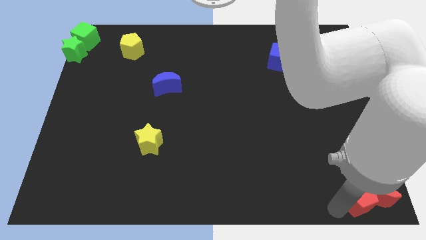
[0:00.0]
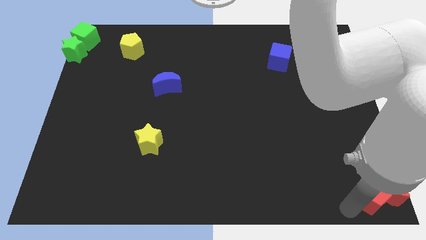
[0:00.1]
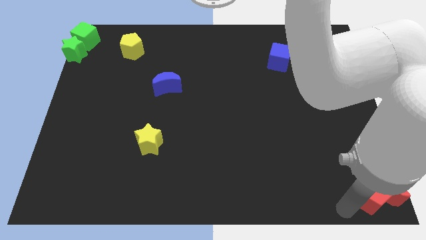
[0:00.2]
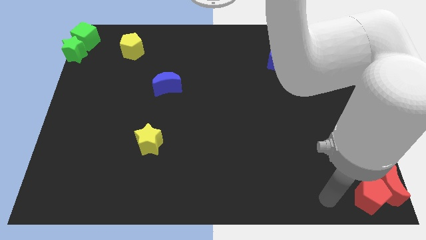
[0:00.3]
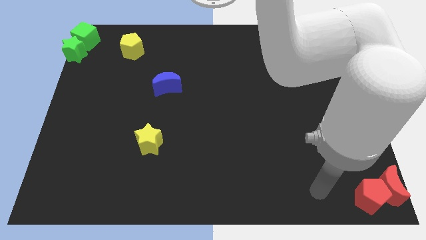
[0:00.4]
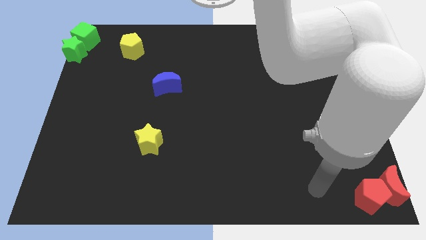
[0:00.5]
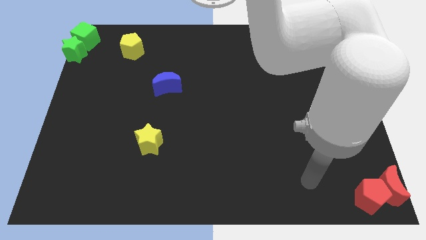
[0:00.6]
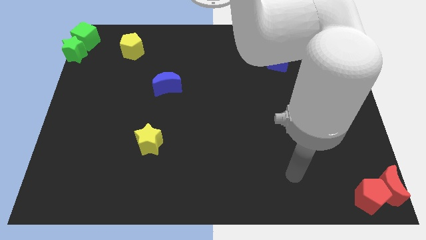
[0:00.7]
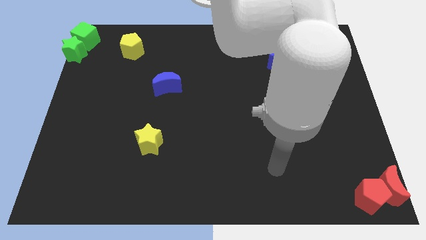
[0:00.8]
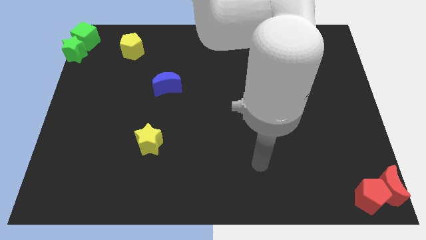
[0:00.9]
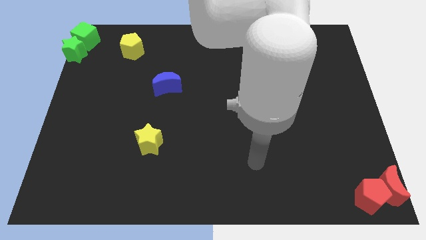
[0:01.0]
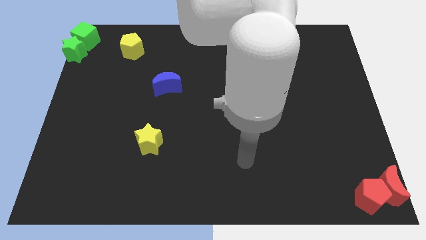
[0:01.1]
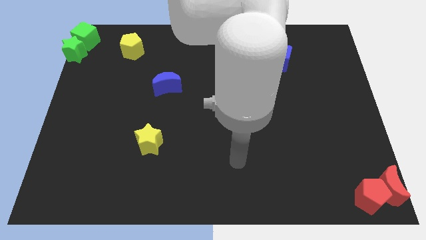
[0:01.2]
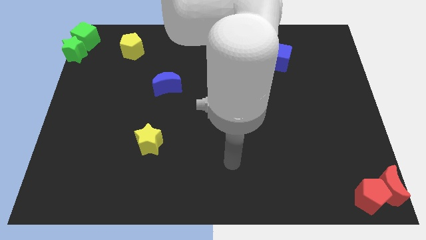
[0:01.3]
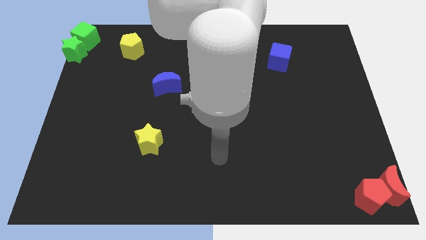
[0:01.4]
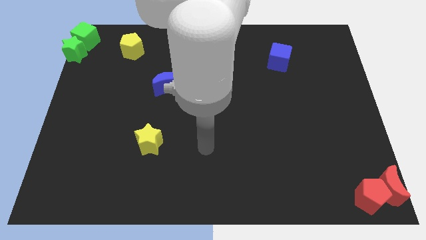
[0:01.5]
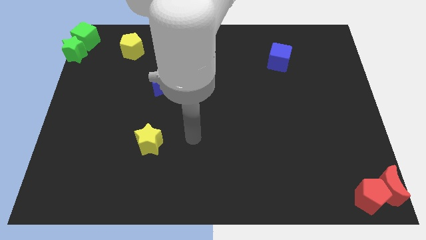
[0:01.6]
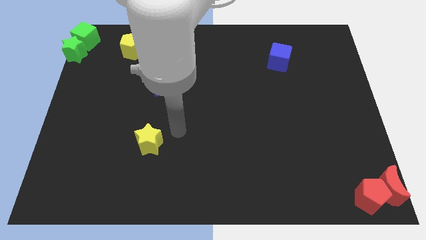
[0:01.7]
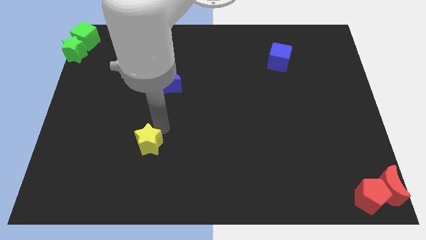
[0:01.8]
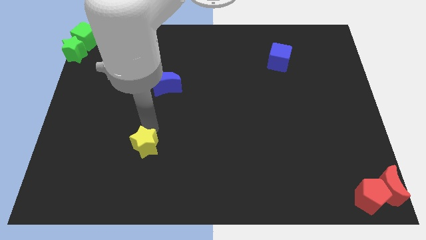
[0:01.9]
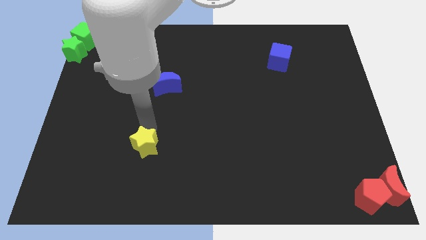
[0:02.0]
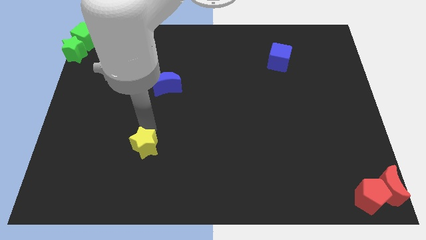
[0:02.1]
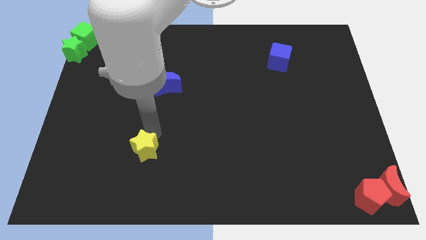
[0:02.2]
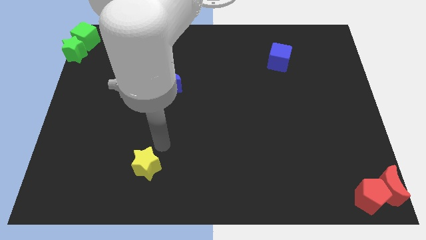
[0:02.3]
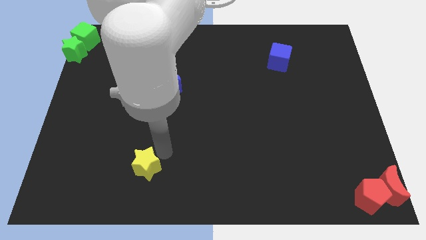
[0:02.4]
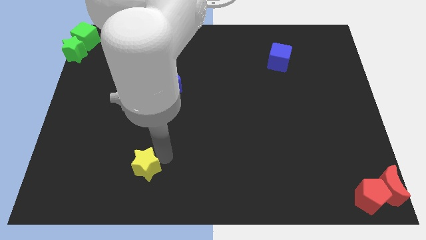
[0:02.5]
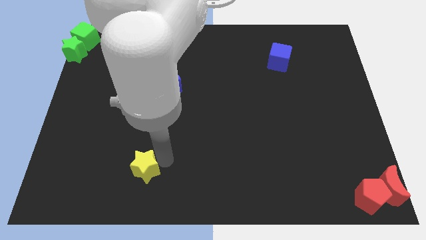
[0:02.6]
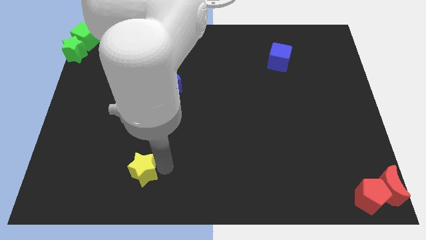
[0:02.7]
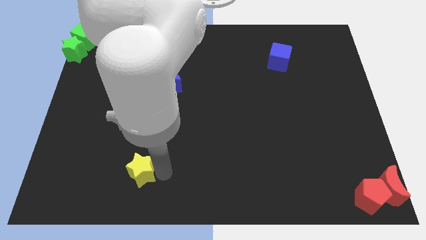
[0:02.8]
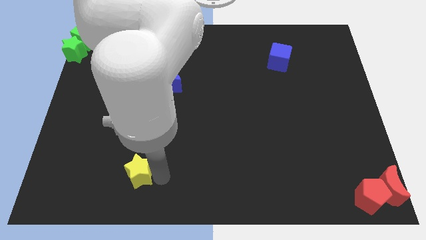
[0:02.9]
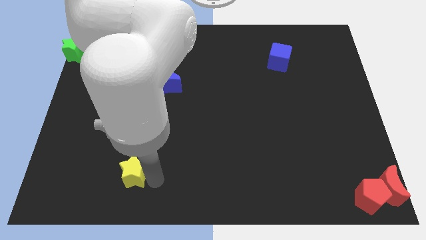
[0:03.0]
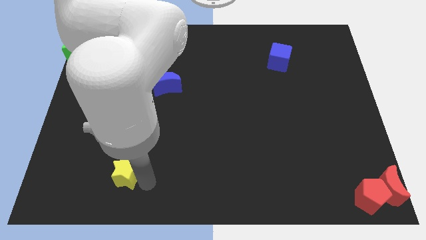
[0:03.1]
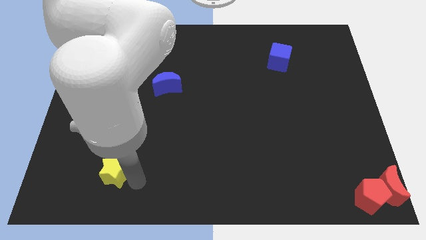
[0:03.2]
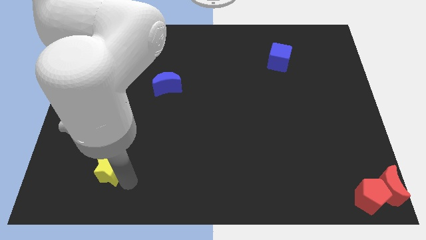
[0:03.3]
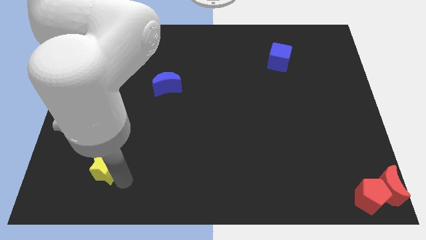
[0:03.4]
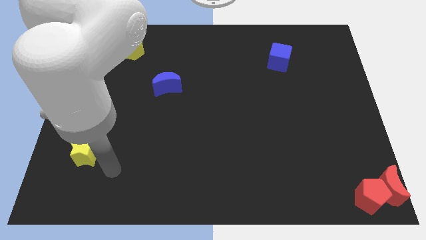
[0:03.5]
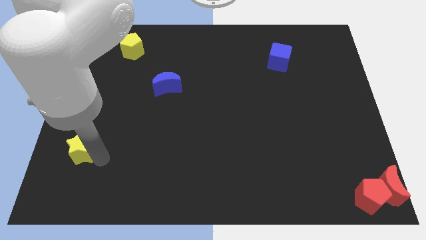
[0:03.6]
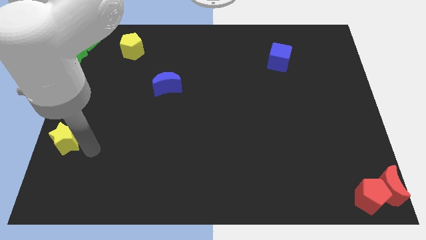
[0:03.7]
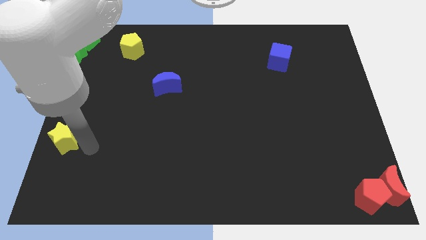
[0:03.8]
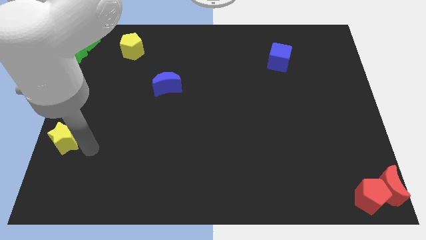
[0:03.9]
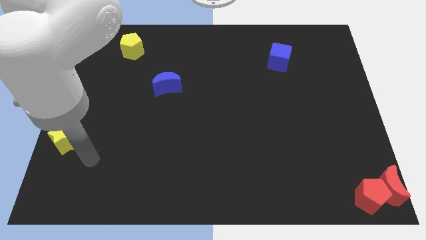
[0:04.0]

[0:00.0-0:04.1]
move the yellow star towards the left centre of the board

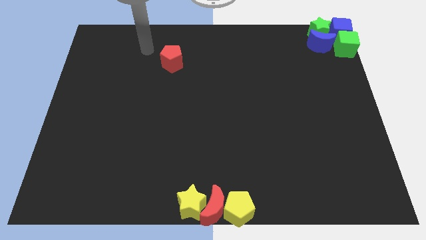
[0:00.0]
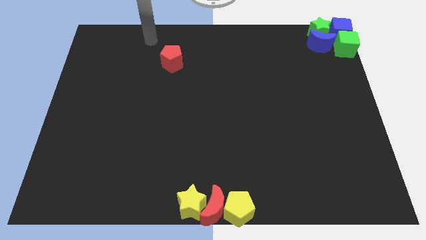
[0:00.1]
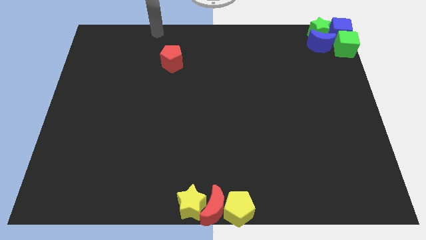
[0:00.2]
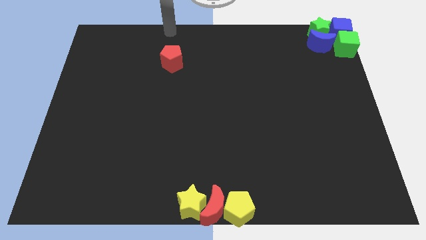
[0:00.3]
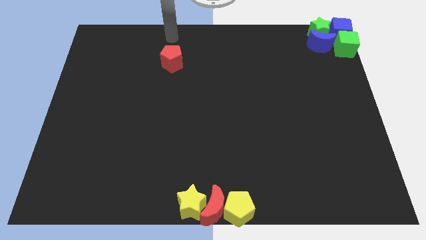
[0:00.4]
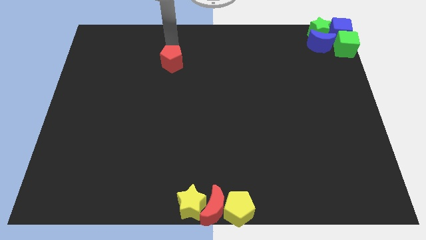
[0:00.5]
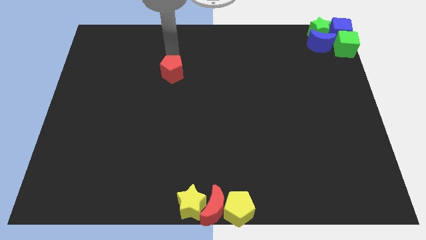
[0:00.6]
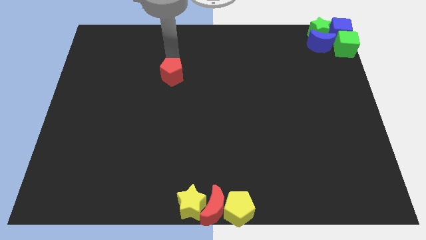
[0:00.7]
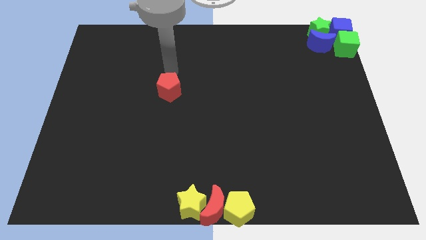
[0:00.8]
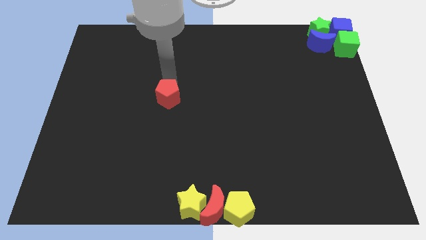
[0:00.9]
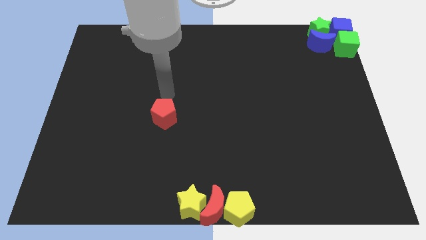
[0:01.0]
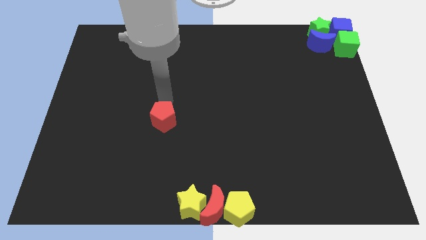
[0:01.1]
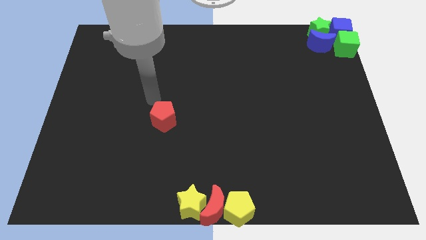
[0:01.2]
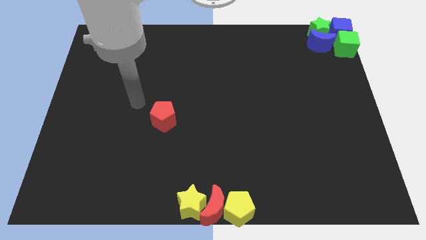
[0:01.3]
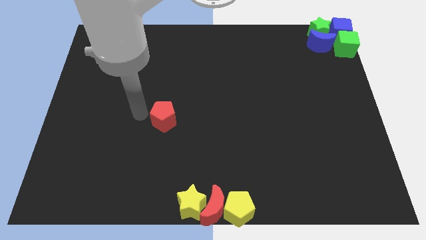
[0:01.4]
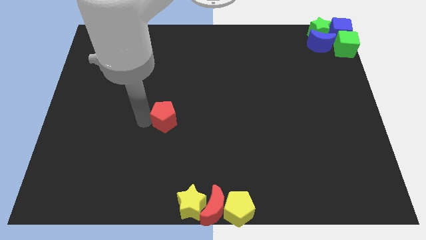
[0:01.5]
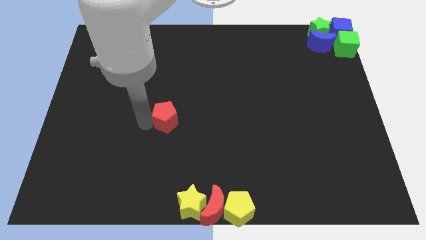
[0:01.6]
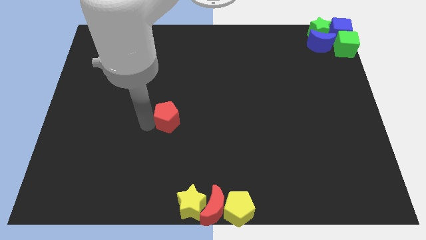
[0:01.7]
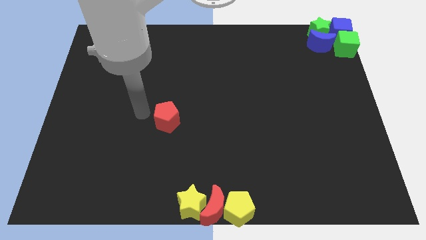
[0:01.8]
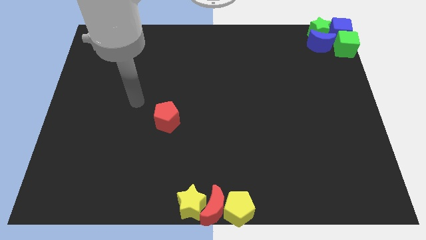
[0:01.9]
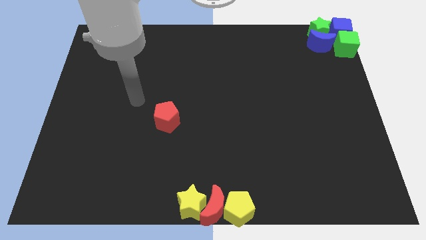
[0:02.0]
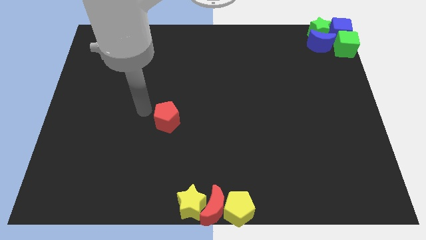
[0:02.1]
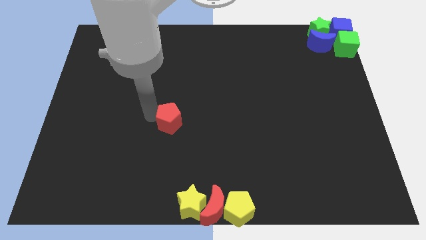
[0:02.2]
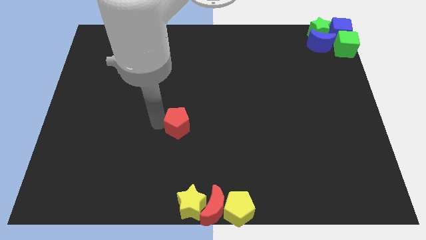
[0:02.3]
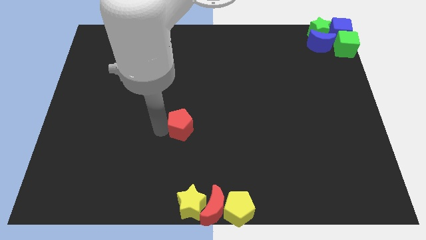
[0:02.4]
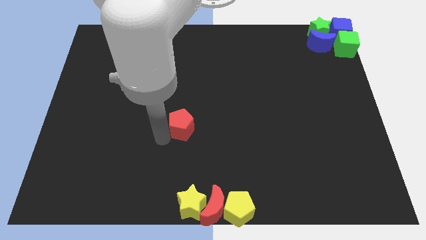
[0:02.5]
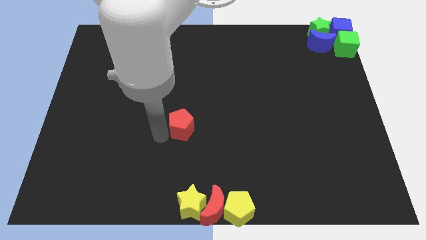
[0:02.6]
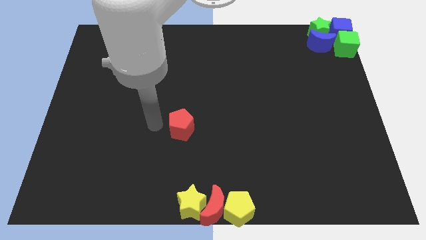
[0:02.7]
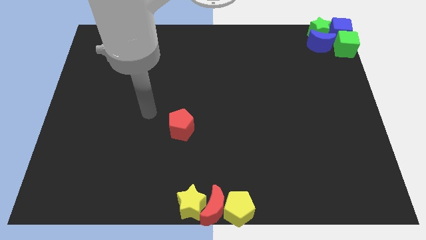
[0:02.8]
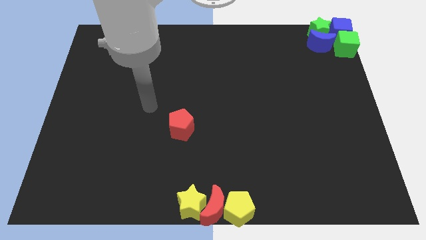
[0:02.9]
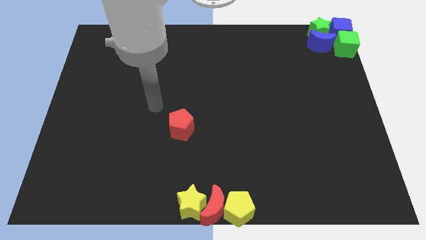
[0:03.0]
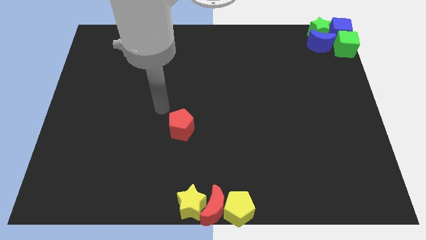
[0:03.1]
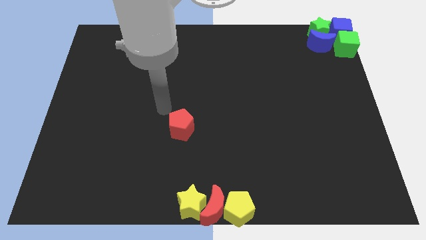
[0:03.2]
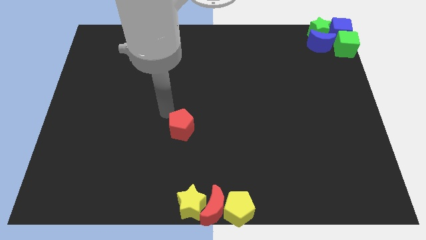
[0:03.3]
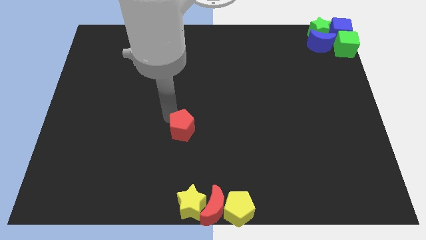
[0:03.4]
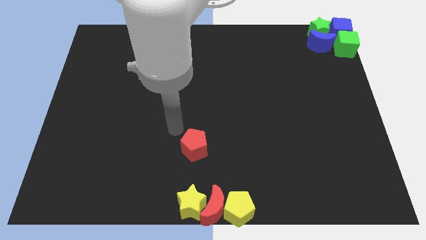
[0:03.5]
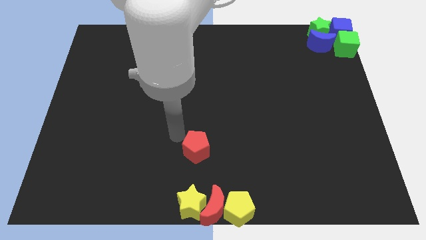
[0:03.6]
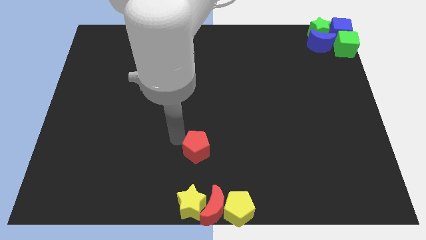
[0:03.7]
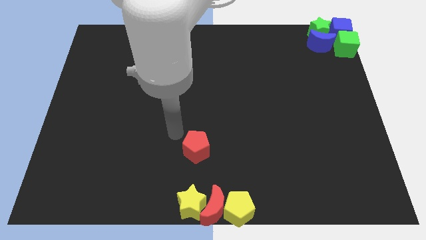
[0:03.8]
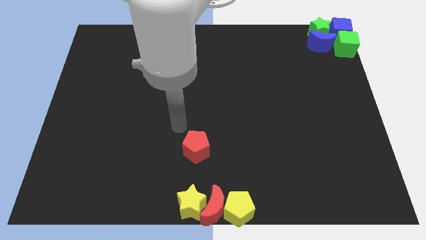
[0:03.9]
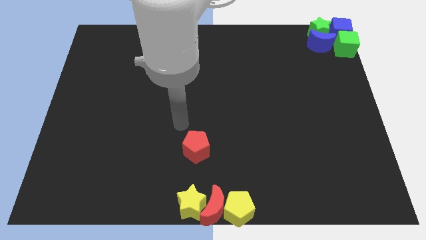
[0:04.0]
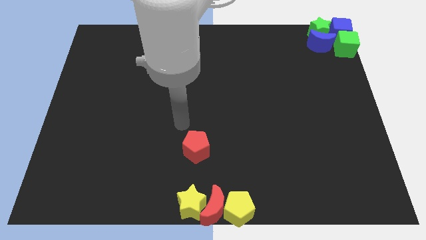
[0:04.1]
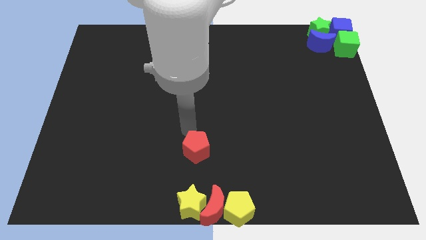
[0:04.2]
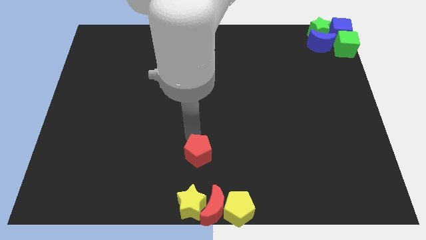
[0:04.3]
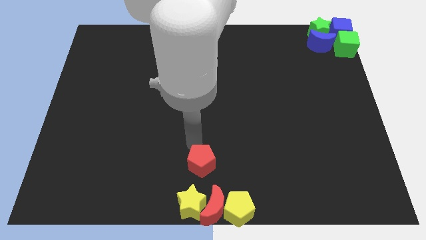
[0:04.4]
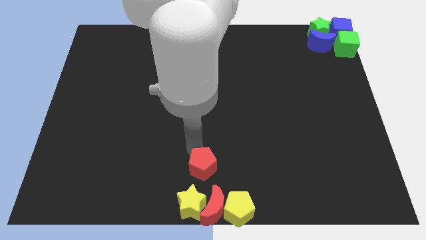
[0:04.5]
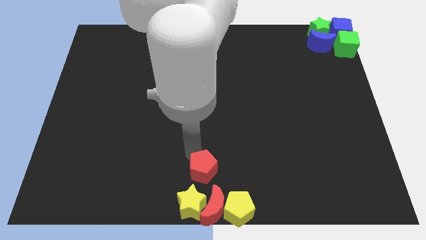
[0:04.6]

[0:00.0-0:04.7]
push the red pentagon towards the yellow star
